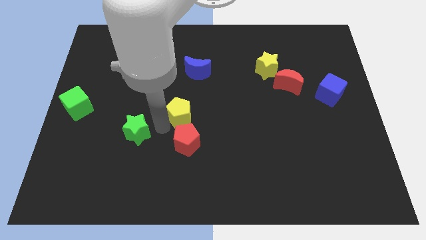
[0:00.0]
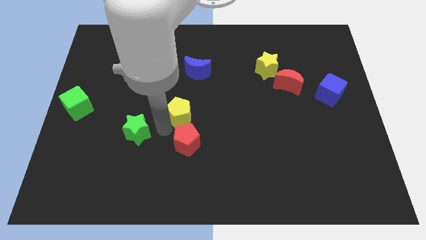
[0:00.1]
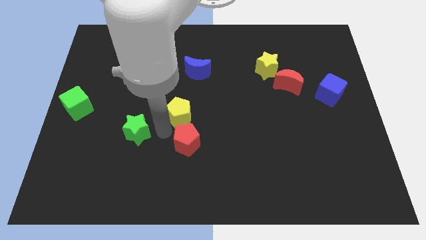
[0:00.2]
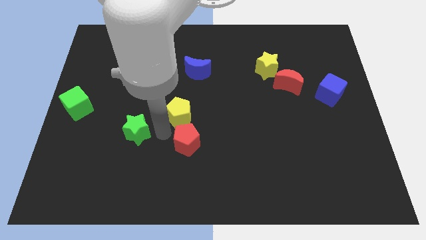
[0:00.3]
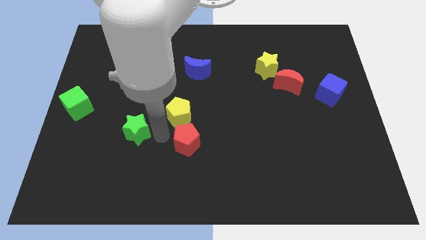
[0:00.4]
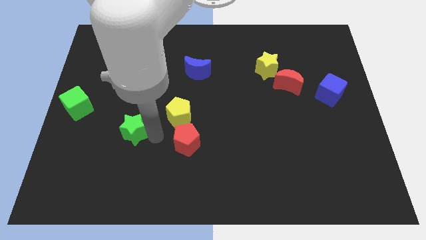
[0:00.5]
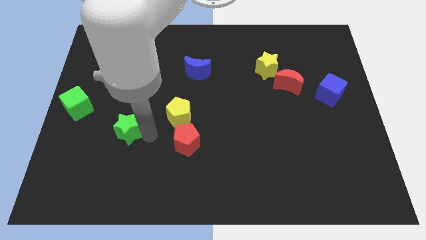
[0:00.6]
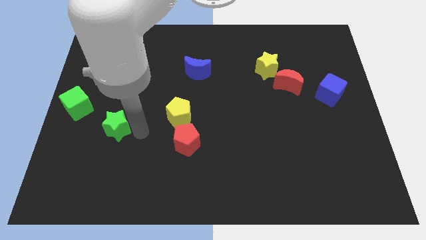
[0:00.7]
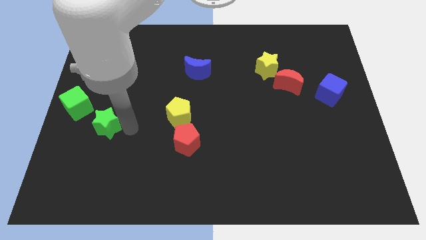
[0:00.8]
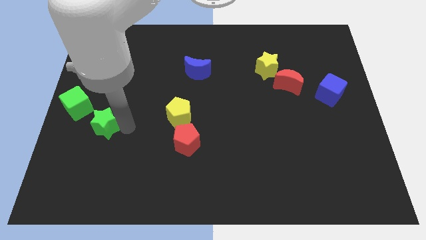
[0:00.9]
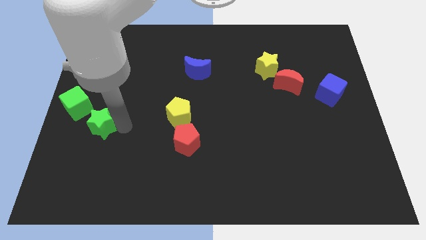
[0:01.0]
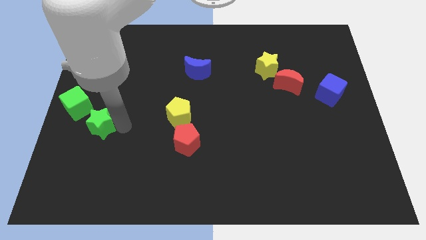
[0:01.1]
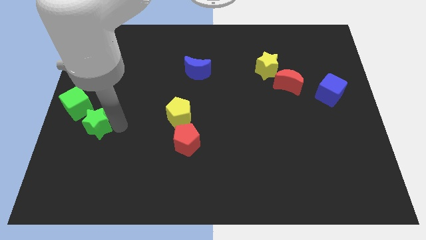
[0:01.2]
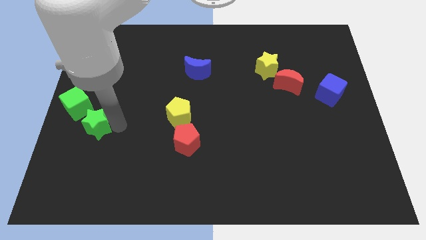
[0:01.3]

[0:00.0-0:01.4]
place the green star diagonal to the green cube

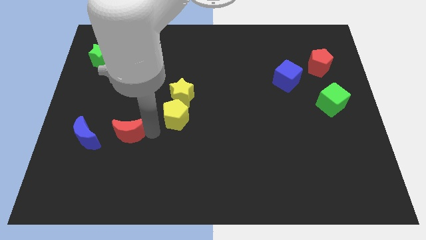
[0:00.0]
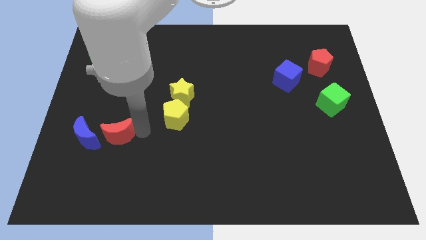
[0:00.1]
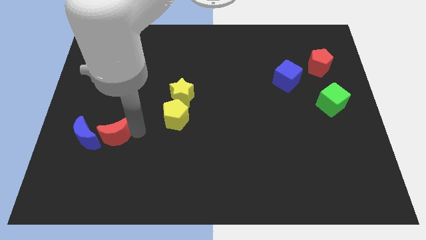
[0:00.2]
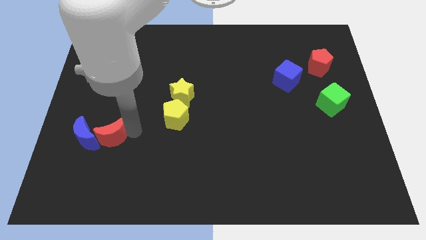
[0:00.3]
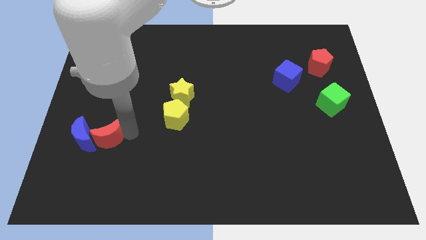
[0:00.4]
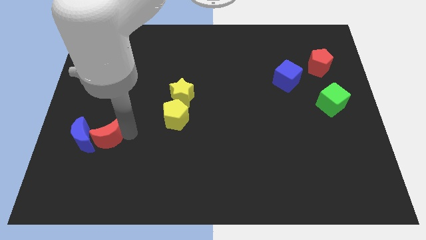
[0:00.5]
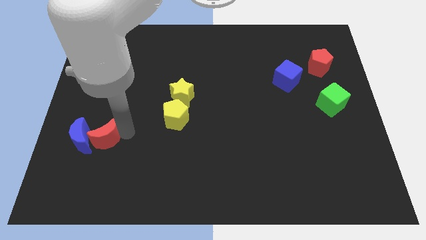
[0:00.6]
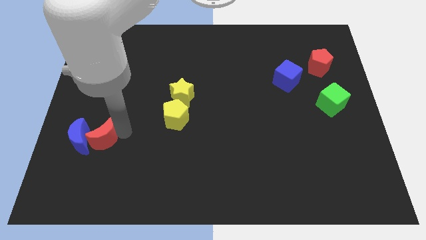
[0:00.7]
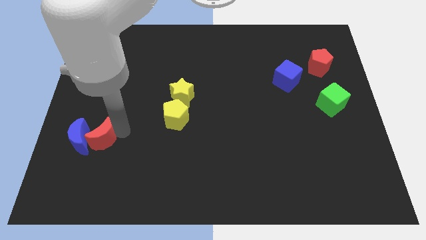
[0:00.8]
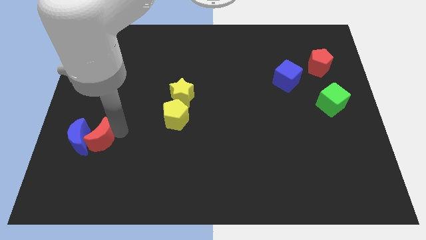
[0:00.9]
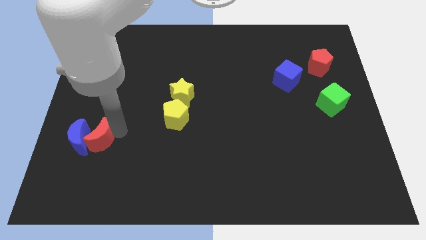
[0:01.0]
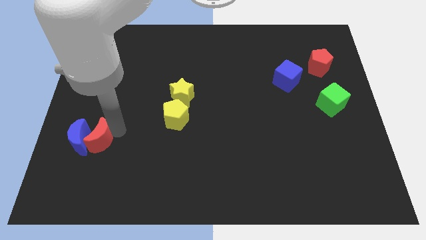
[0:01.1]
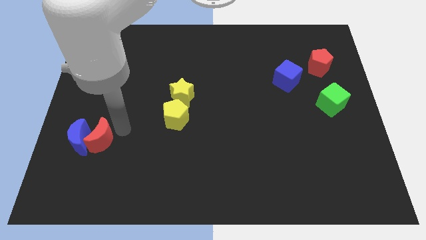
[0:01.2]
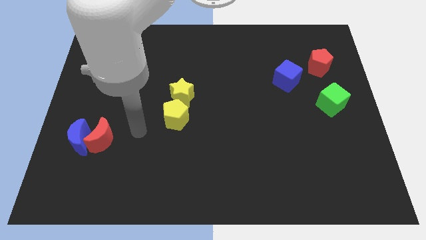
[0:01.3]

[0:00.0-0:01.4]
push the blue and red moons towards the left side of the board

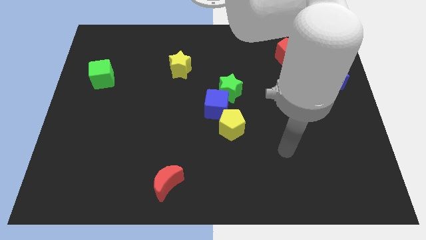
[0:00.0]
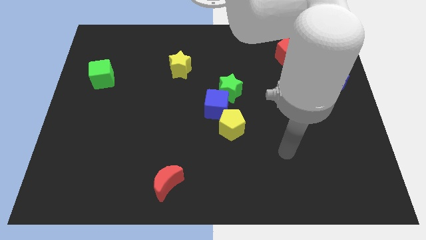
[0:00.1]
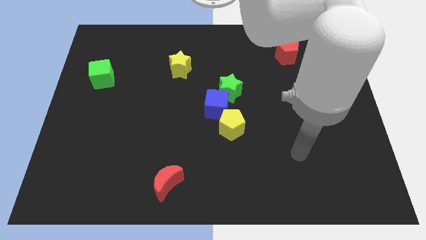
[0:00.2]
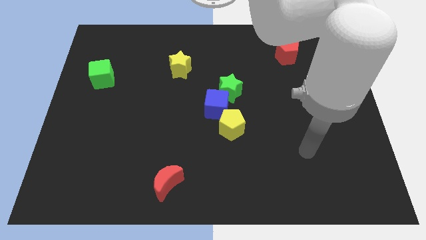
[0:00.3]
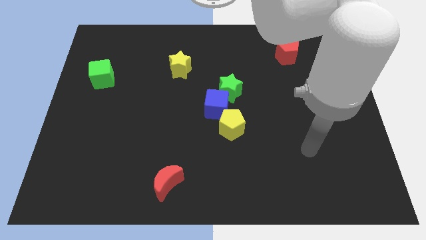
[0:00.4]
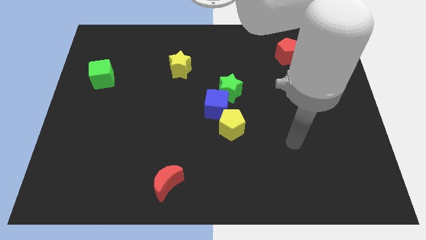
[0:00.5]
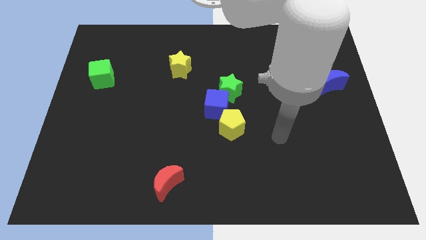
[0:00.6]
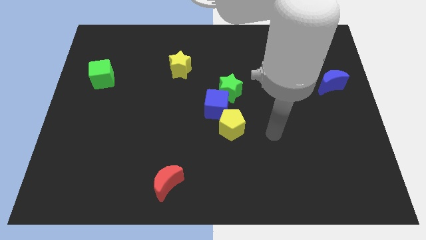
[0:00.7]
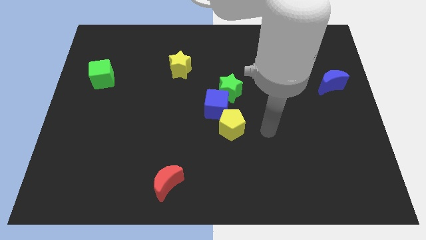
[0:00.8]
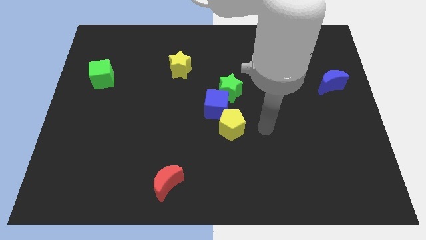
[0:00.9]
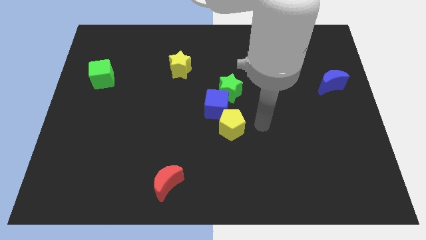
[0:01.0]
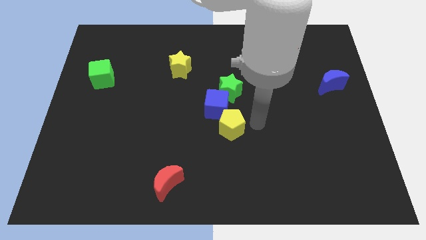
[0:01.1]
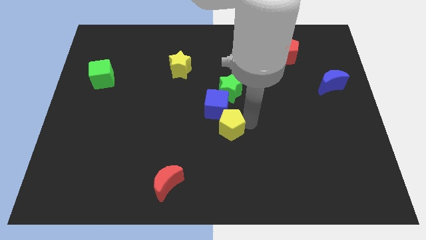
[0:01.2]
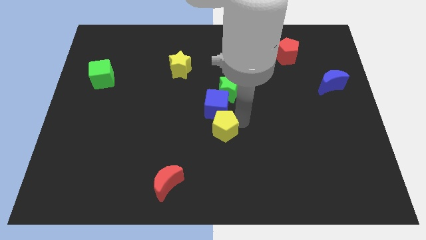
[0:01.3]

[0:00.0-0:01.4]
tap the yellow pentagon

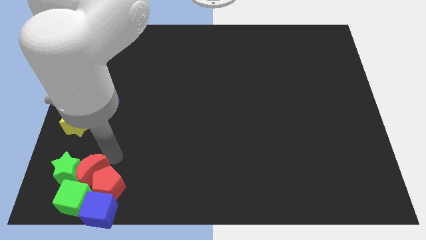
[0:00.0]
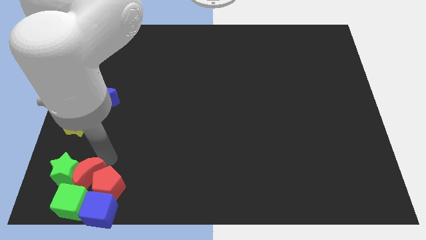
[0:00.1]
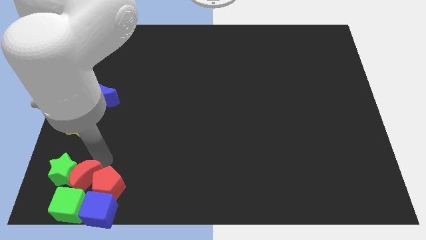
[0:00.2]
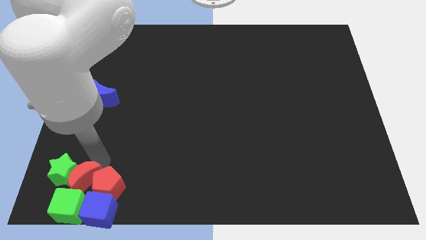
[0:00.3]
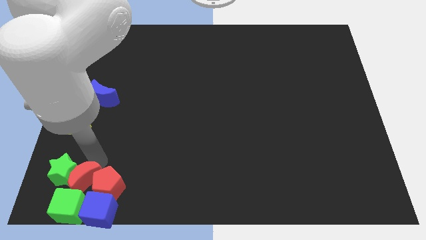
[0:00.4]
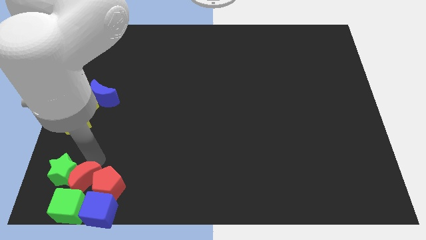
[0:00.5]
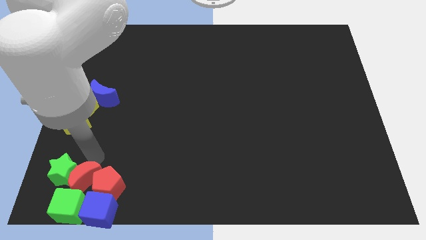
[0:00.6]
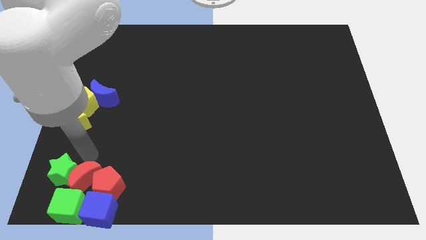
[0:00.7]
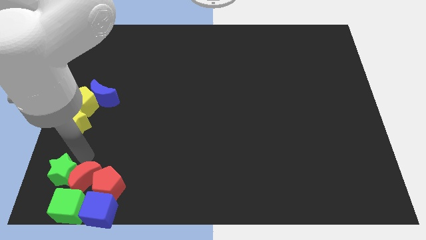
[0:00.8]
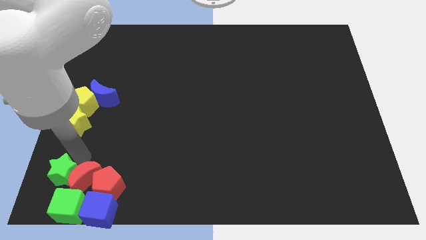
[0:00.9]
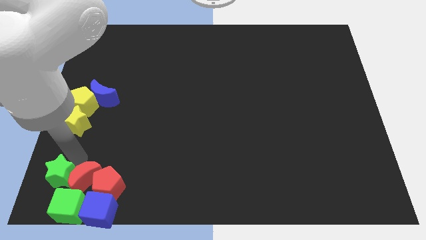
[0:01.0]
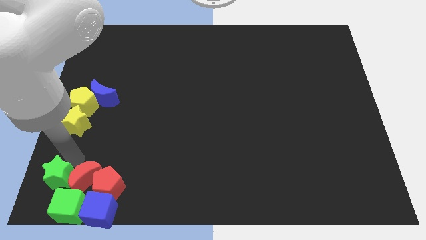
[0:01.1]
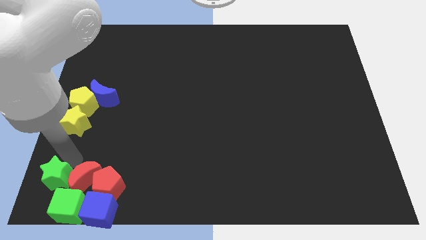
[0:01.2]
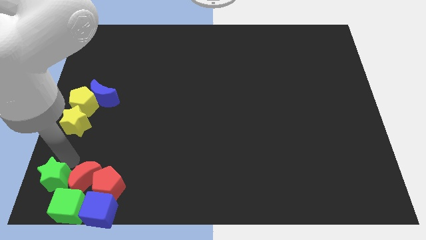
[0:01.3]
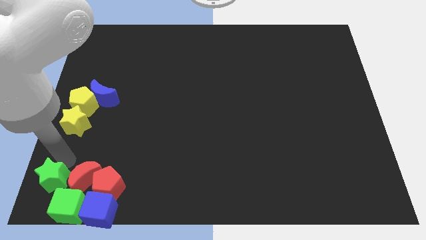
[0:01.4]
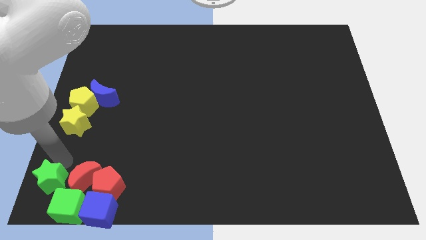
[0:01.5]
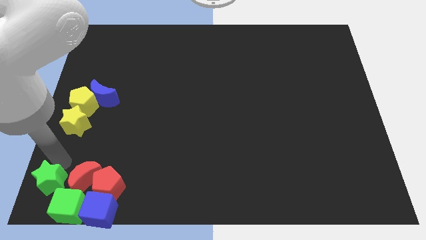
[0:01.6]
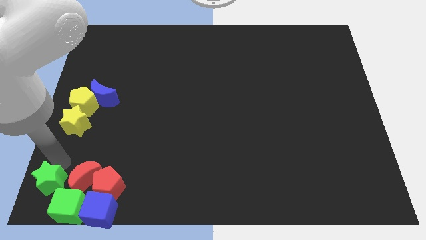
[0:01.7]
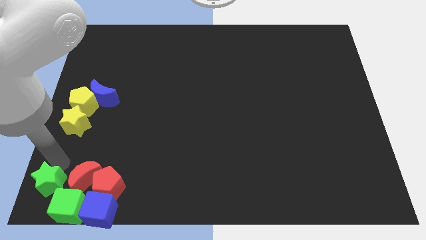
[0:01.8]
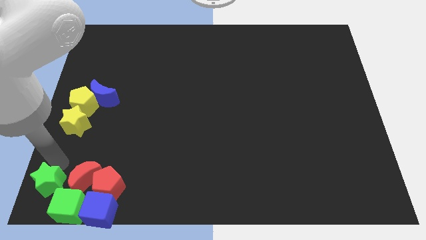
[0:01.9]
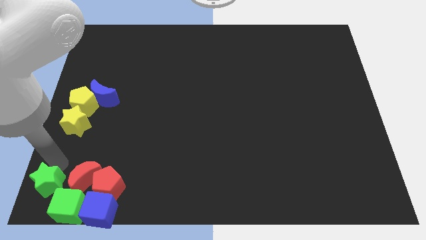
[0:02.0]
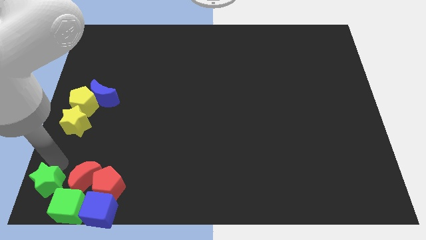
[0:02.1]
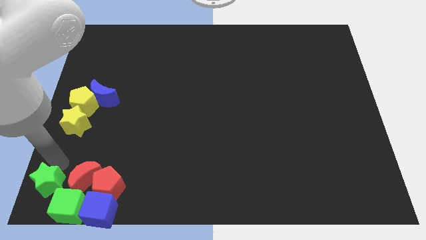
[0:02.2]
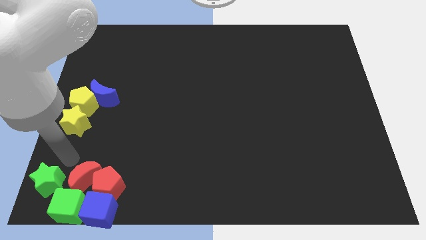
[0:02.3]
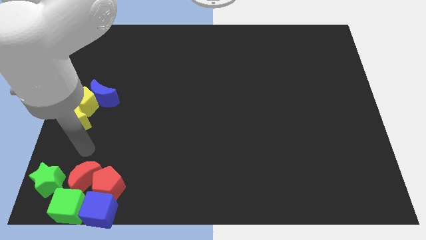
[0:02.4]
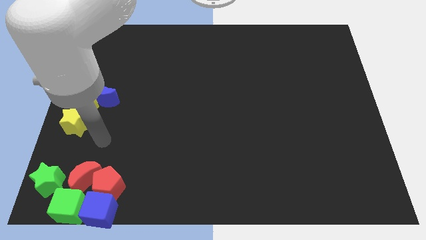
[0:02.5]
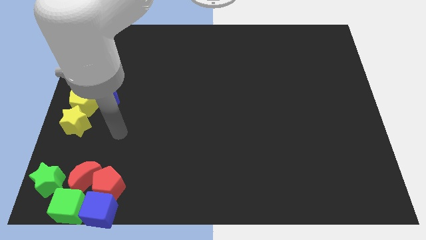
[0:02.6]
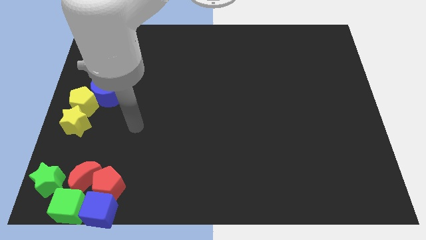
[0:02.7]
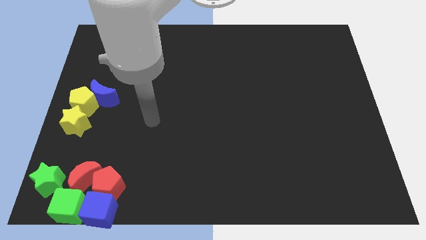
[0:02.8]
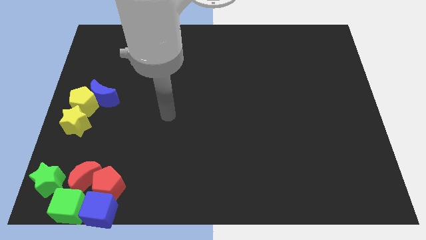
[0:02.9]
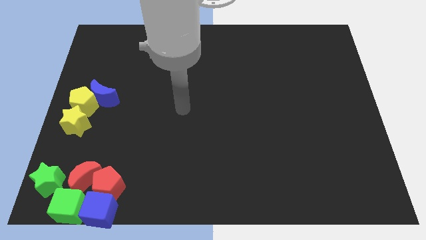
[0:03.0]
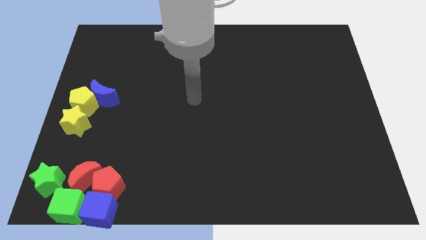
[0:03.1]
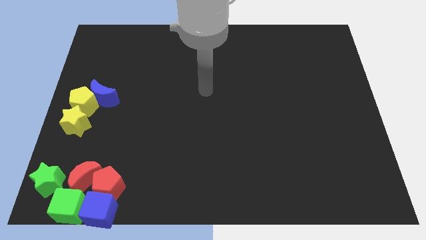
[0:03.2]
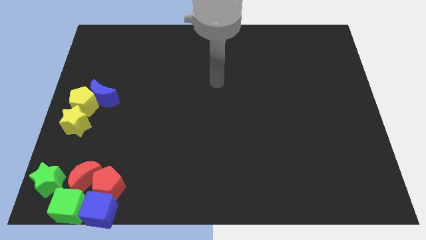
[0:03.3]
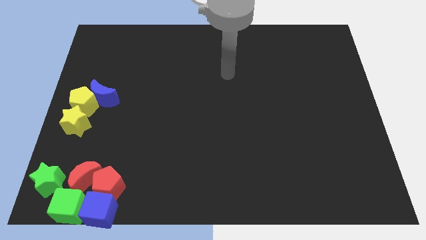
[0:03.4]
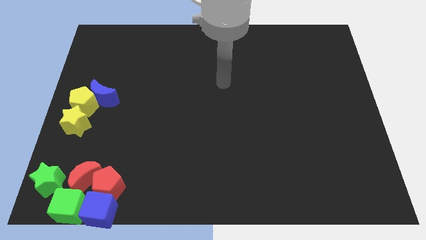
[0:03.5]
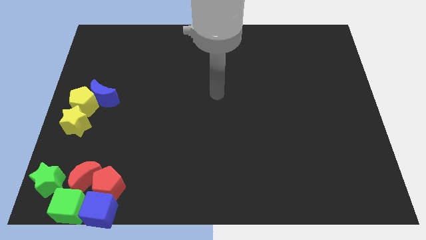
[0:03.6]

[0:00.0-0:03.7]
place green star to the bottom left corner of the board

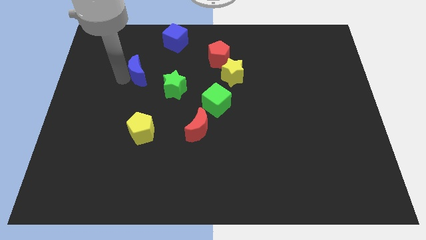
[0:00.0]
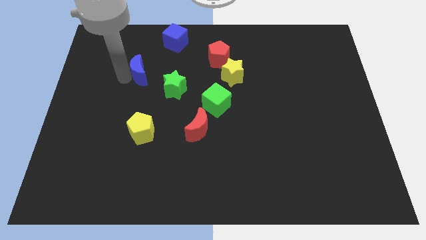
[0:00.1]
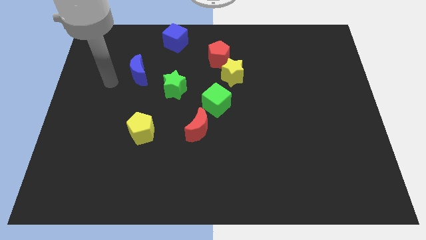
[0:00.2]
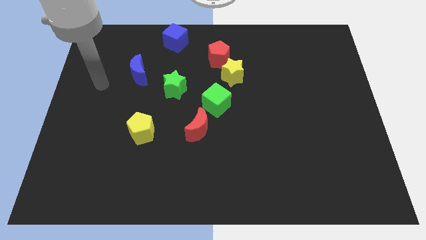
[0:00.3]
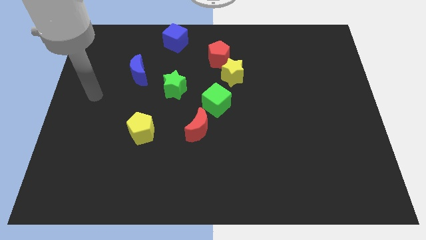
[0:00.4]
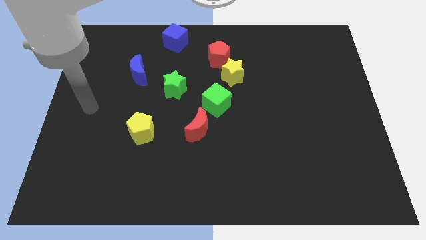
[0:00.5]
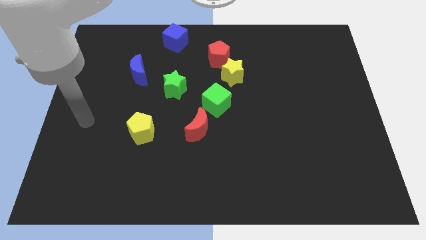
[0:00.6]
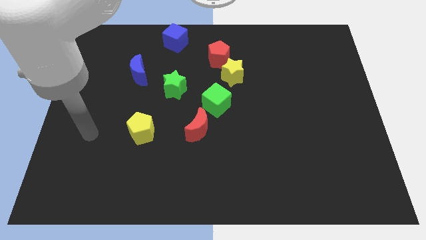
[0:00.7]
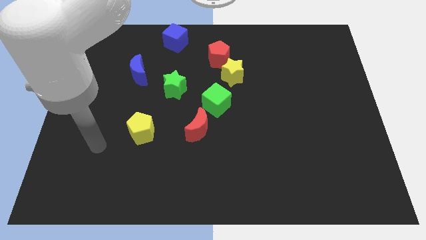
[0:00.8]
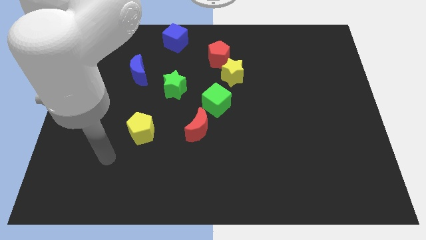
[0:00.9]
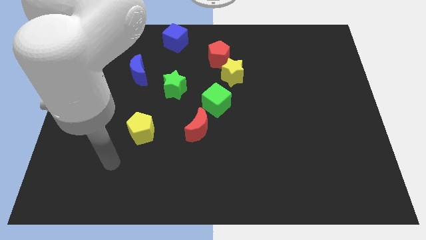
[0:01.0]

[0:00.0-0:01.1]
place your arm diagonally bottom left to the yellow pentagon
